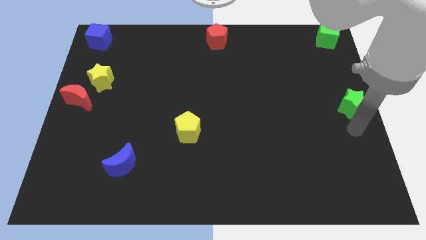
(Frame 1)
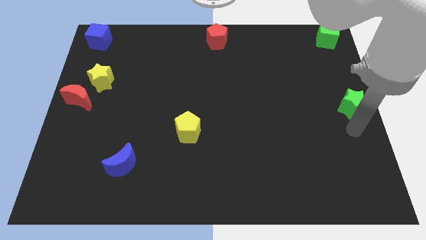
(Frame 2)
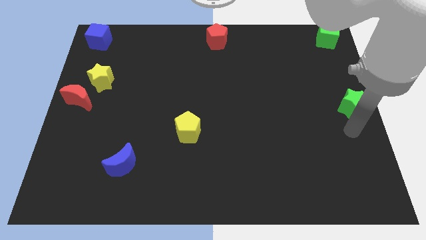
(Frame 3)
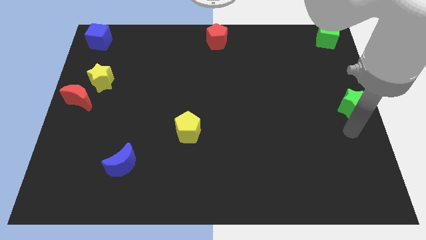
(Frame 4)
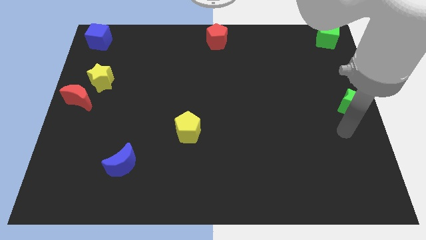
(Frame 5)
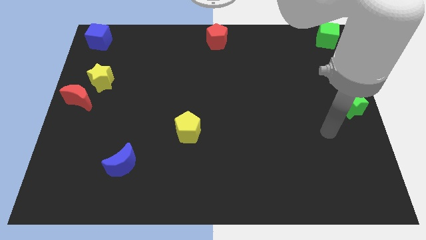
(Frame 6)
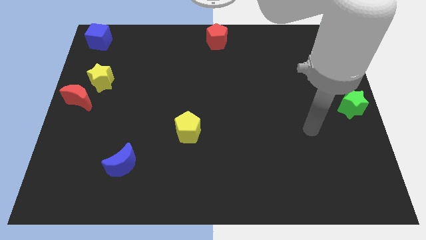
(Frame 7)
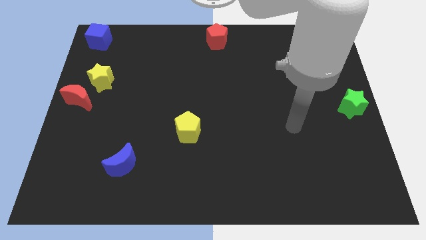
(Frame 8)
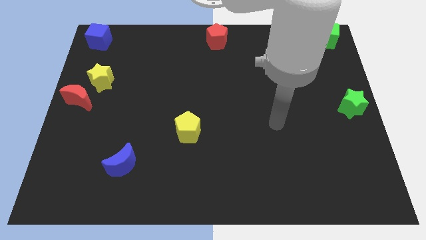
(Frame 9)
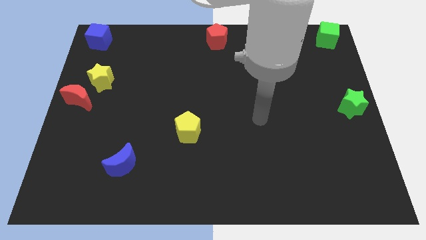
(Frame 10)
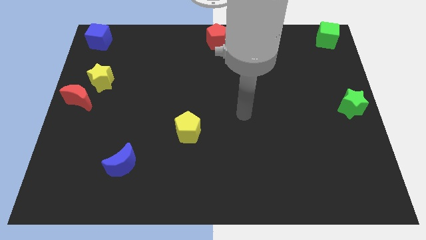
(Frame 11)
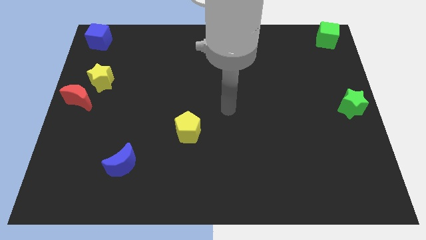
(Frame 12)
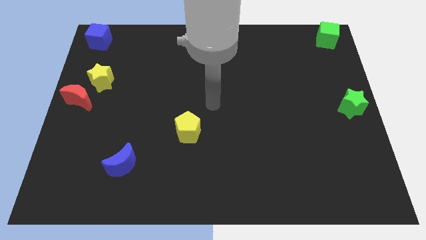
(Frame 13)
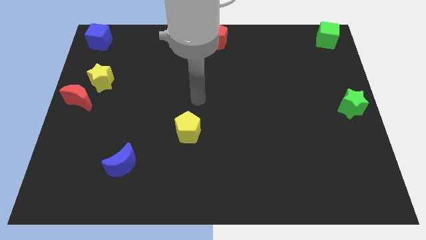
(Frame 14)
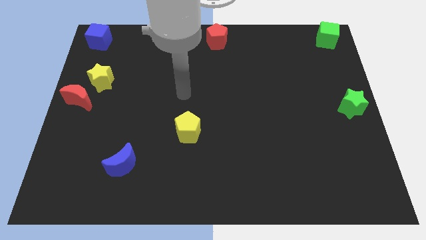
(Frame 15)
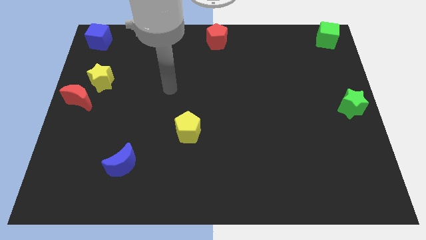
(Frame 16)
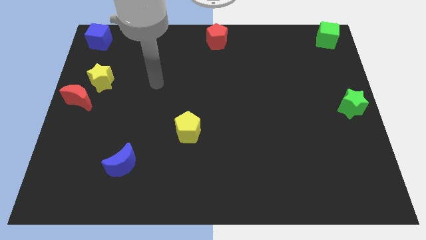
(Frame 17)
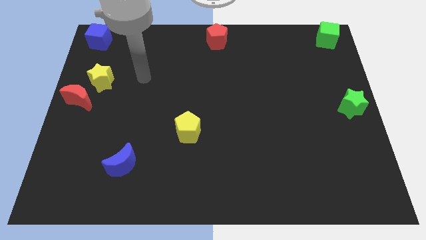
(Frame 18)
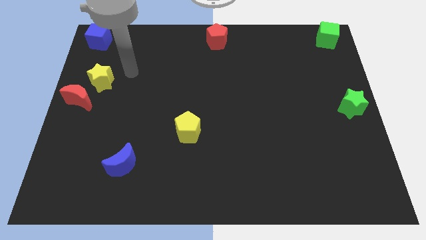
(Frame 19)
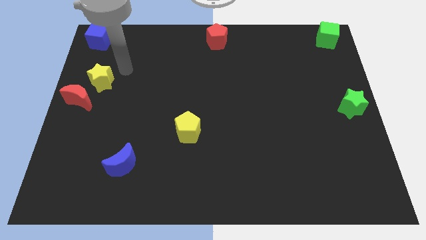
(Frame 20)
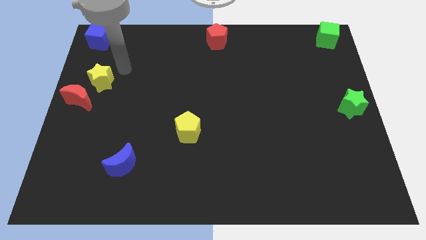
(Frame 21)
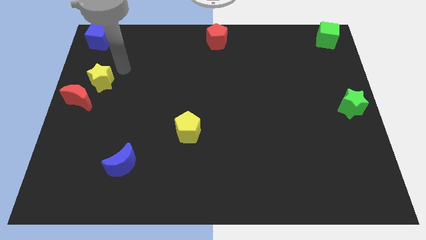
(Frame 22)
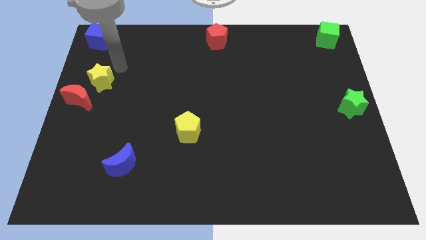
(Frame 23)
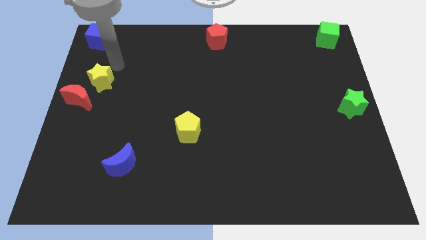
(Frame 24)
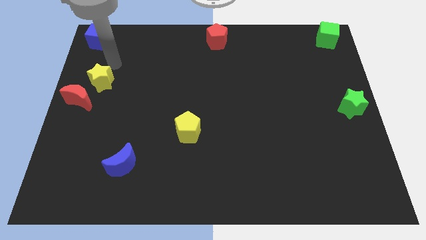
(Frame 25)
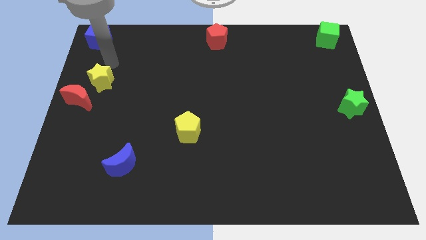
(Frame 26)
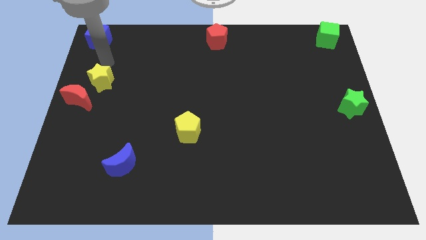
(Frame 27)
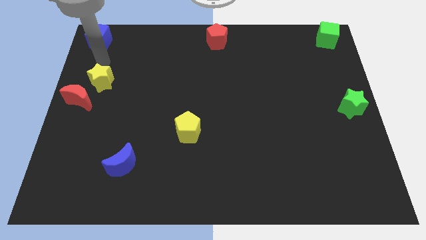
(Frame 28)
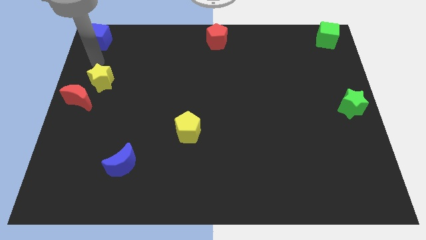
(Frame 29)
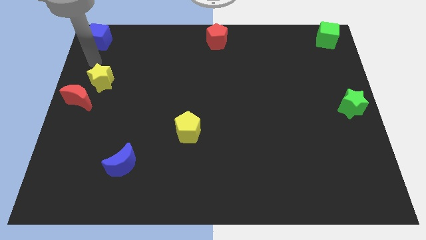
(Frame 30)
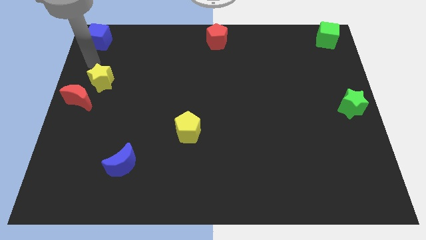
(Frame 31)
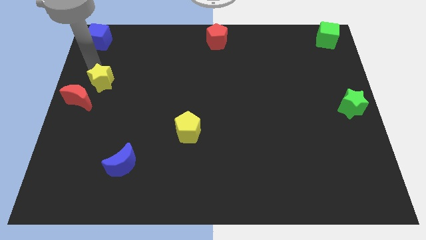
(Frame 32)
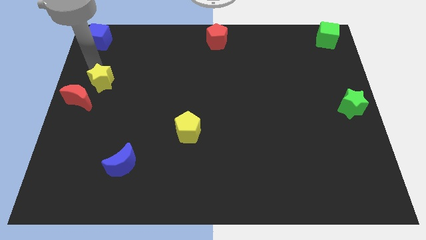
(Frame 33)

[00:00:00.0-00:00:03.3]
point your arm towards the top side of the yellow star

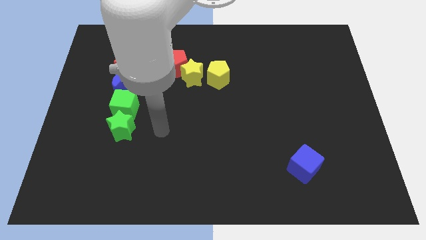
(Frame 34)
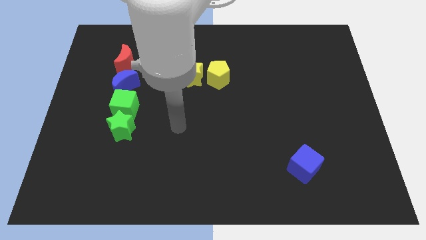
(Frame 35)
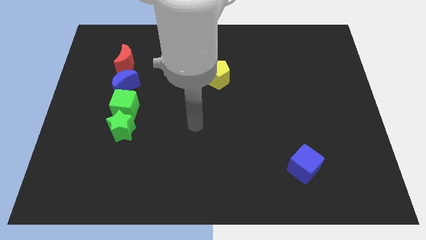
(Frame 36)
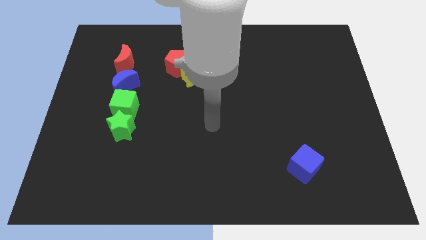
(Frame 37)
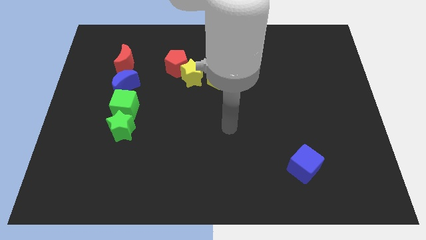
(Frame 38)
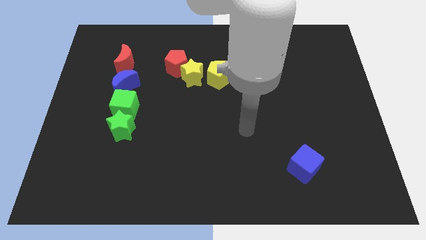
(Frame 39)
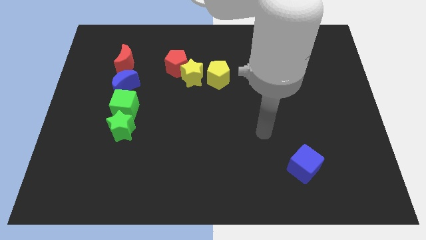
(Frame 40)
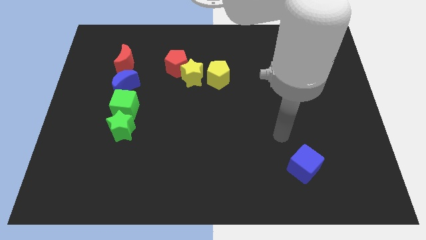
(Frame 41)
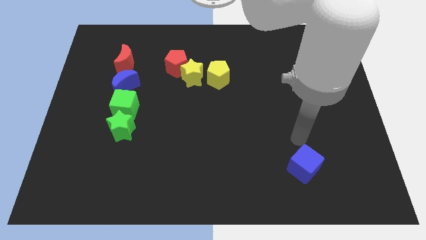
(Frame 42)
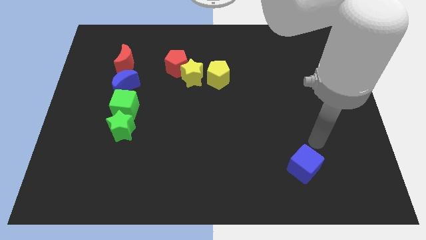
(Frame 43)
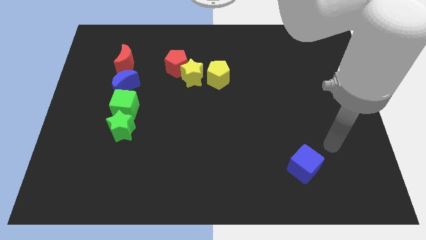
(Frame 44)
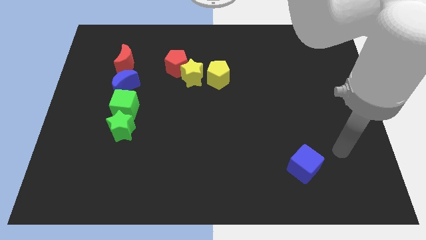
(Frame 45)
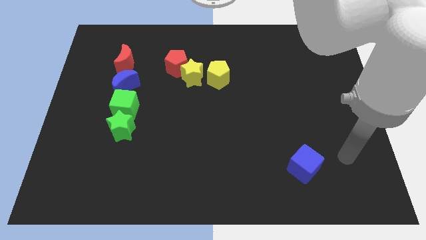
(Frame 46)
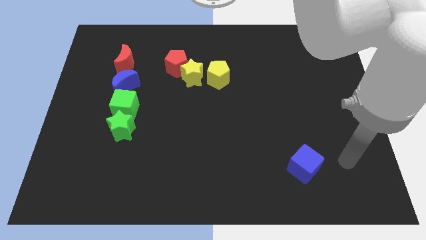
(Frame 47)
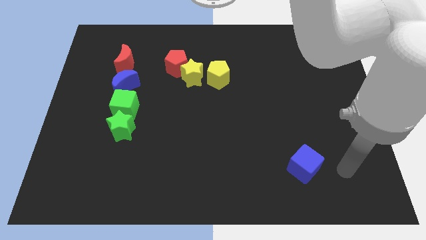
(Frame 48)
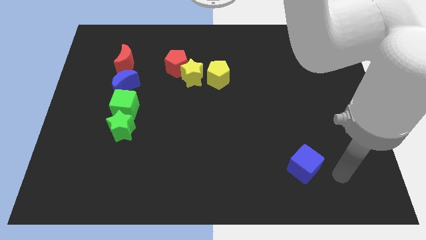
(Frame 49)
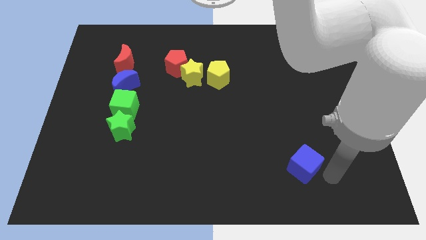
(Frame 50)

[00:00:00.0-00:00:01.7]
move your arm towards blue cube

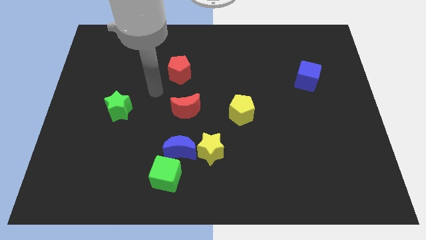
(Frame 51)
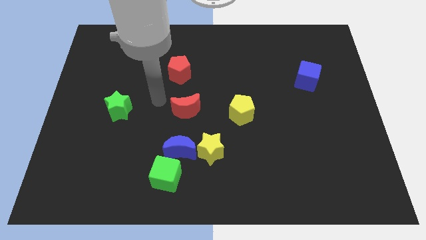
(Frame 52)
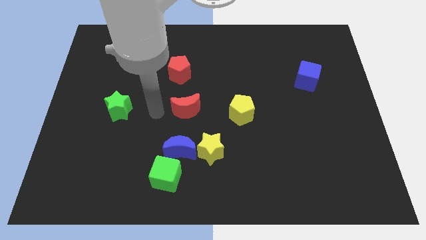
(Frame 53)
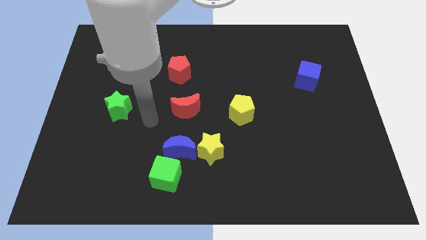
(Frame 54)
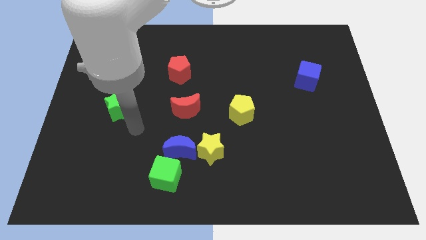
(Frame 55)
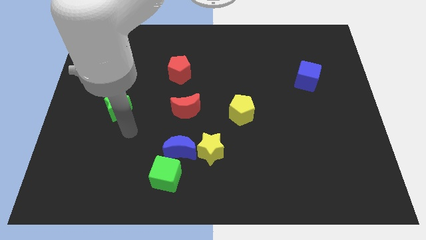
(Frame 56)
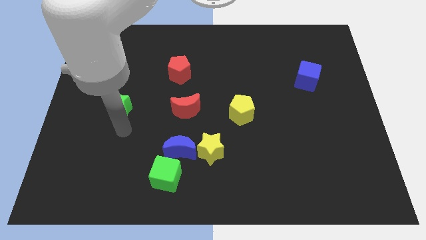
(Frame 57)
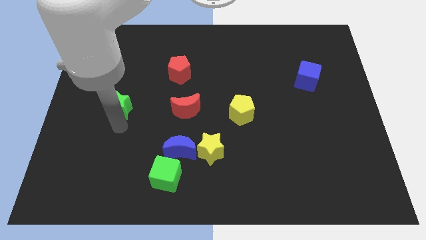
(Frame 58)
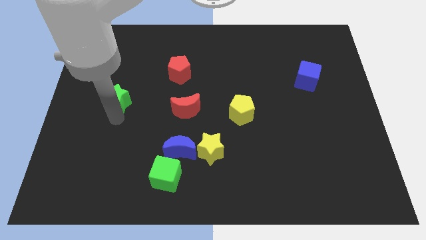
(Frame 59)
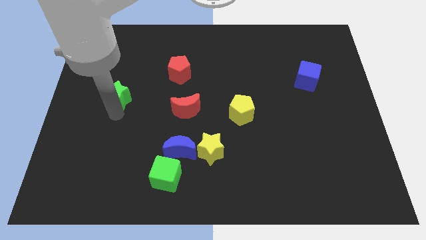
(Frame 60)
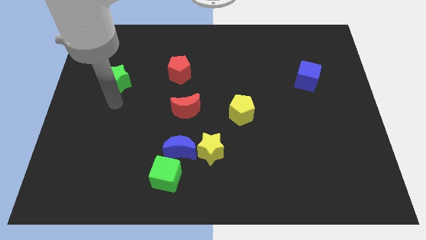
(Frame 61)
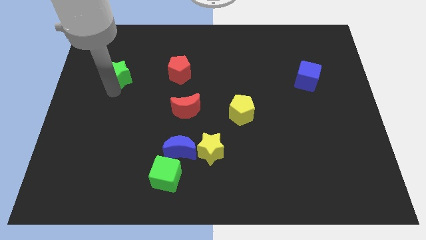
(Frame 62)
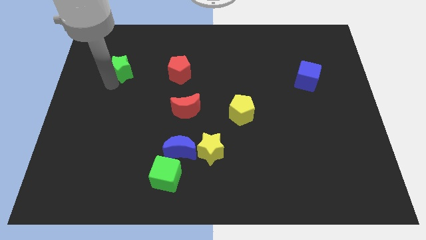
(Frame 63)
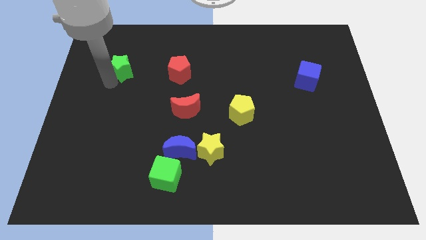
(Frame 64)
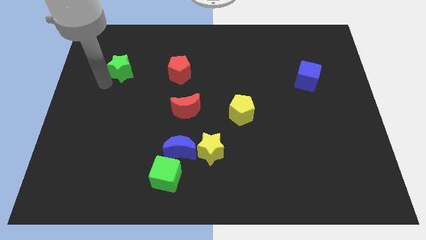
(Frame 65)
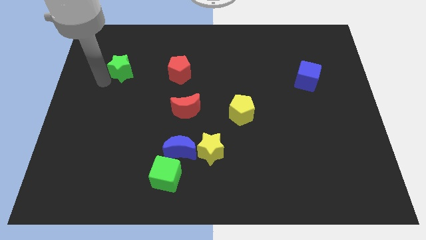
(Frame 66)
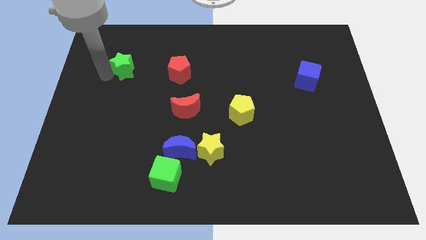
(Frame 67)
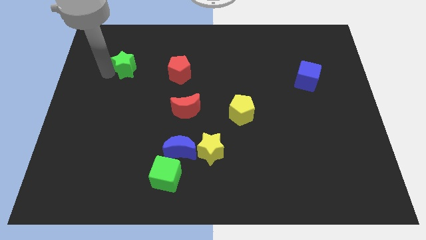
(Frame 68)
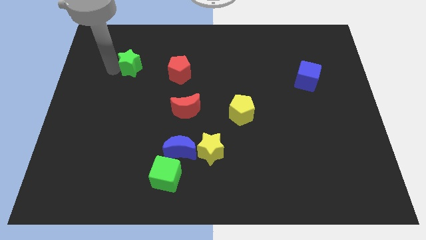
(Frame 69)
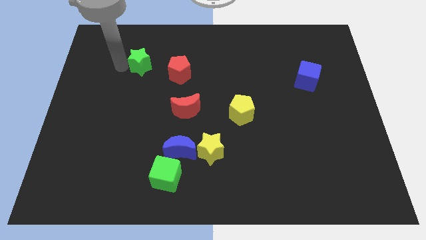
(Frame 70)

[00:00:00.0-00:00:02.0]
move the green star to the left of red pentagon

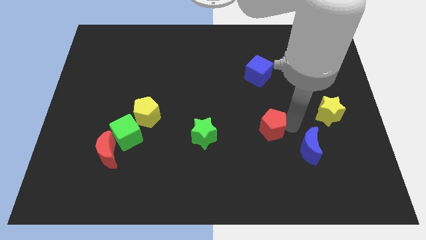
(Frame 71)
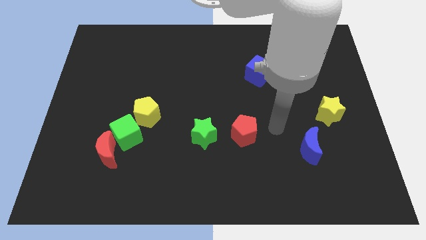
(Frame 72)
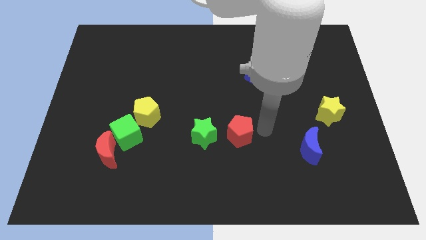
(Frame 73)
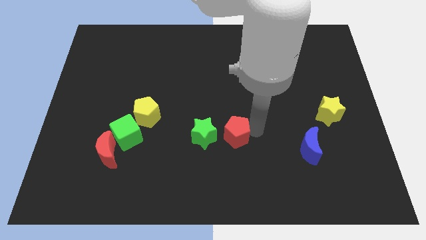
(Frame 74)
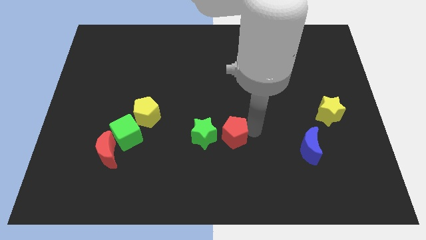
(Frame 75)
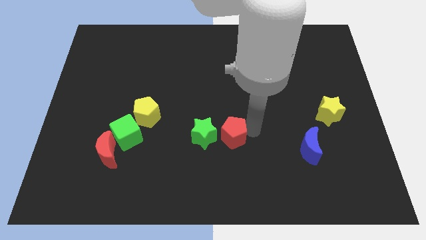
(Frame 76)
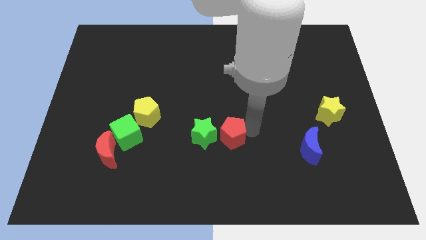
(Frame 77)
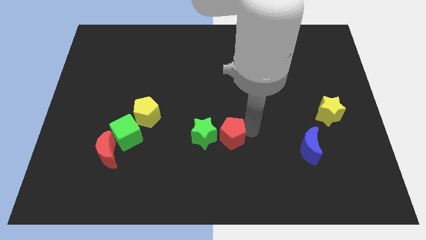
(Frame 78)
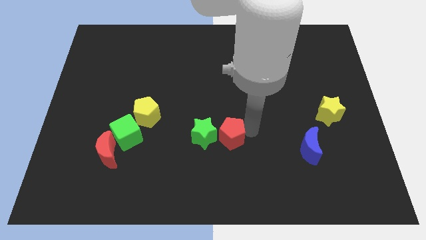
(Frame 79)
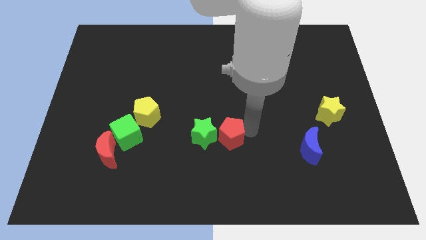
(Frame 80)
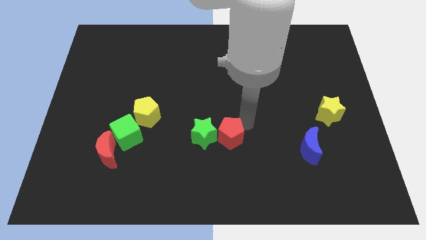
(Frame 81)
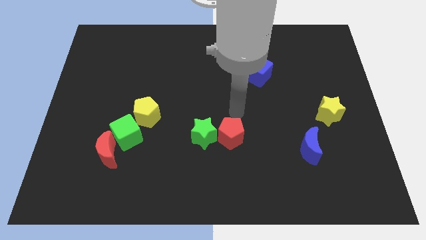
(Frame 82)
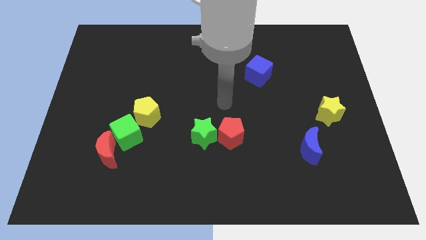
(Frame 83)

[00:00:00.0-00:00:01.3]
push the red pentagon to the right of the green star

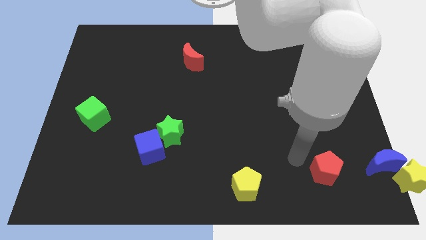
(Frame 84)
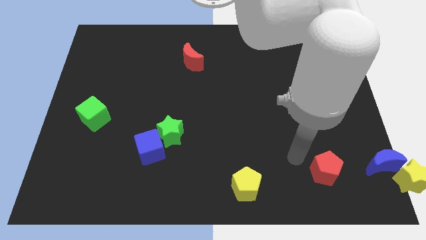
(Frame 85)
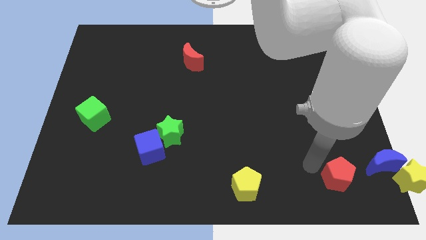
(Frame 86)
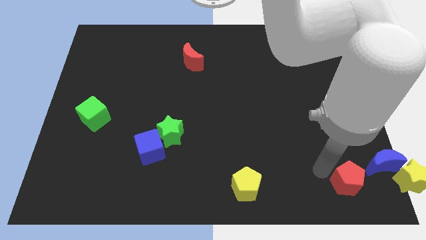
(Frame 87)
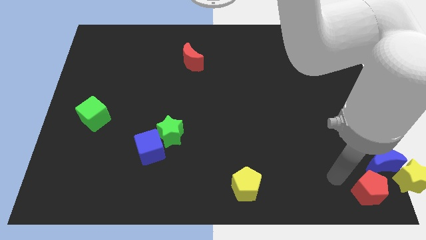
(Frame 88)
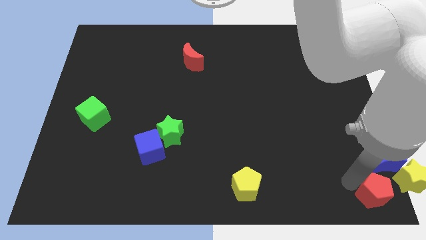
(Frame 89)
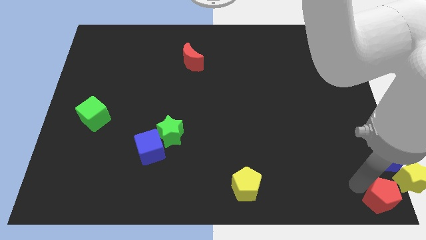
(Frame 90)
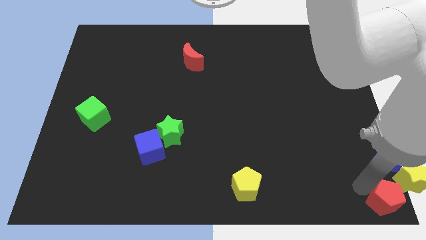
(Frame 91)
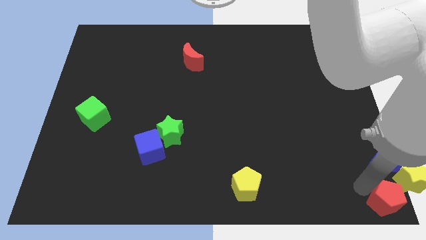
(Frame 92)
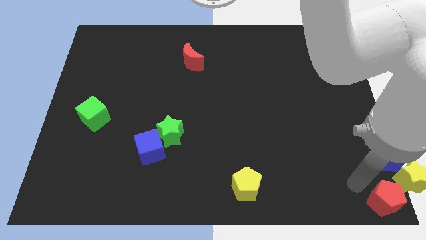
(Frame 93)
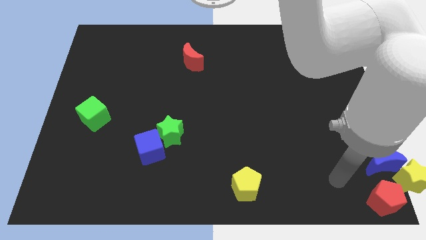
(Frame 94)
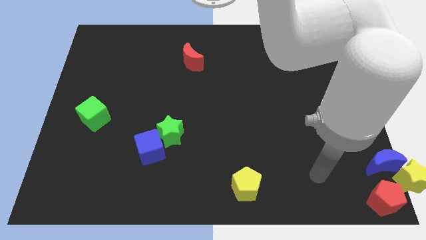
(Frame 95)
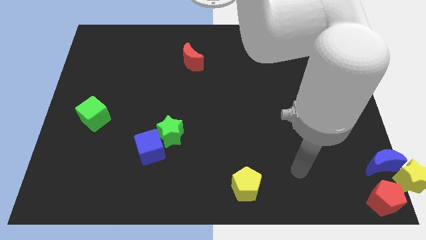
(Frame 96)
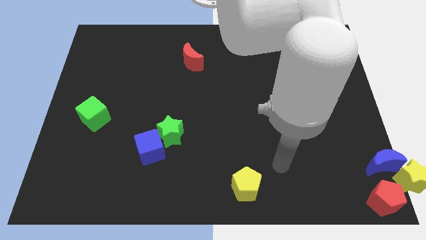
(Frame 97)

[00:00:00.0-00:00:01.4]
move the red pentagon below the blue crescent
